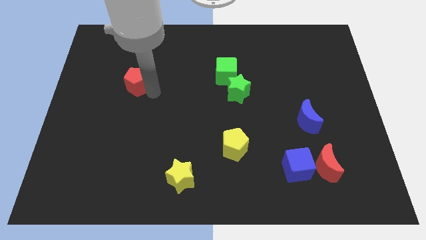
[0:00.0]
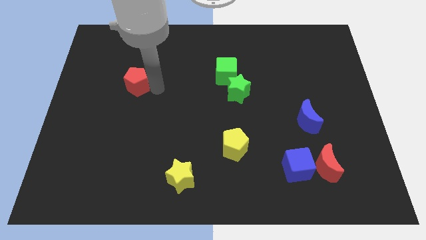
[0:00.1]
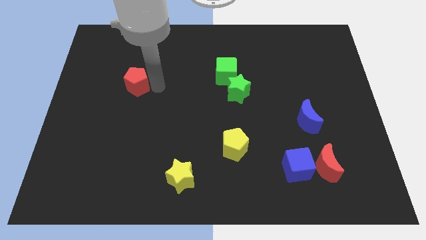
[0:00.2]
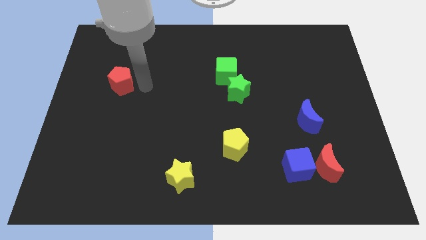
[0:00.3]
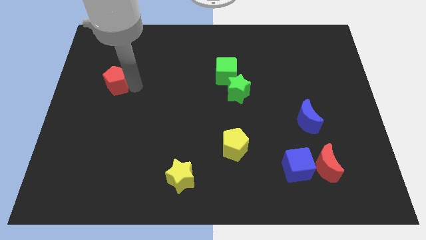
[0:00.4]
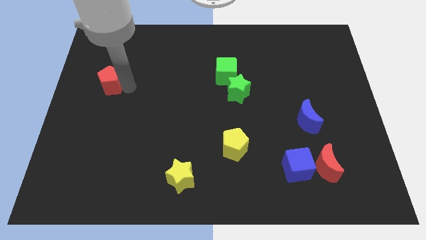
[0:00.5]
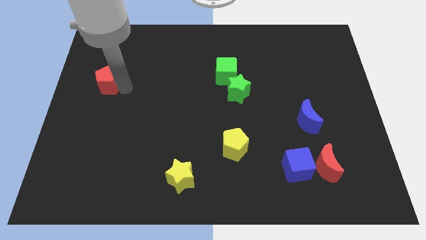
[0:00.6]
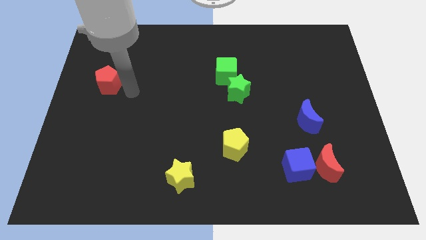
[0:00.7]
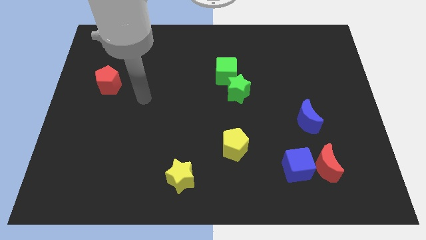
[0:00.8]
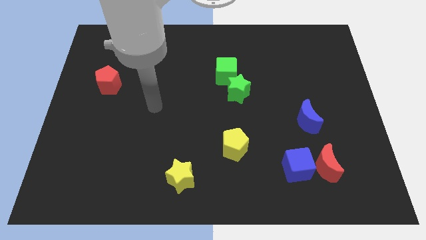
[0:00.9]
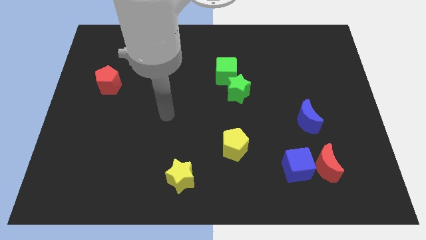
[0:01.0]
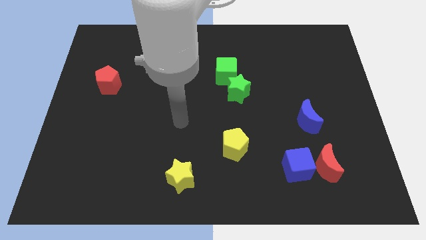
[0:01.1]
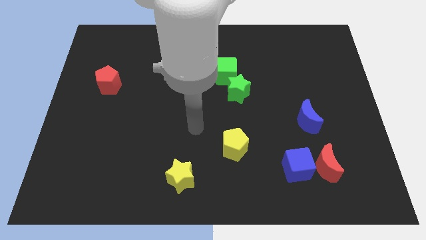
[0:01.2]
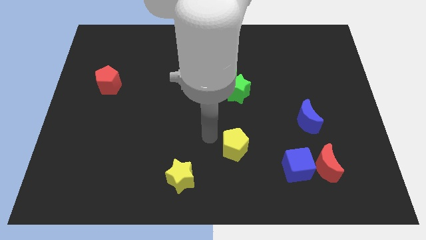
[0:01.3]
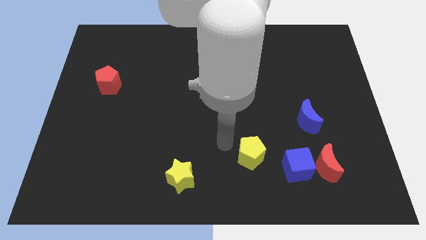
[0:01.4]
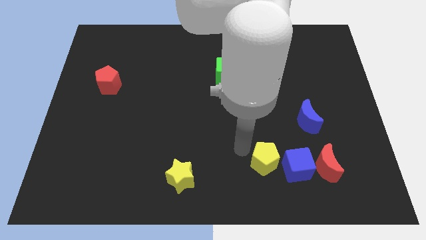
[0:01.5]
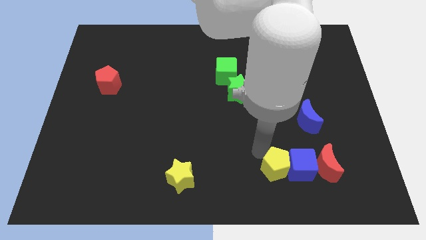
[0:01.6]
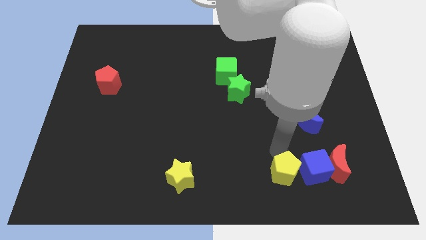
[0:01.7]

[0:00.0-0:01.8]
push the yellow pentagon close to the blue cube

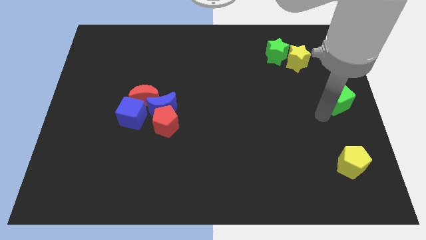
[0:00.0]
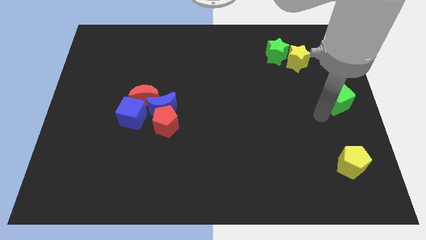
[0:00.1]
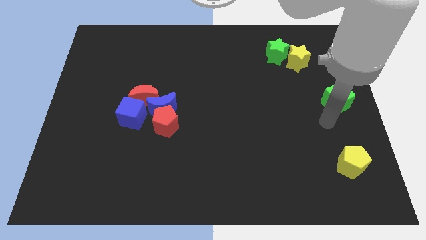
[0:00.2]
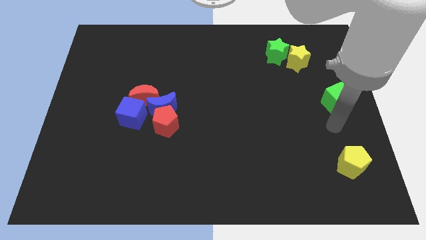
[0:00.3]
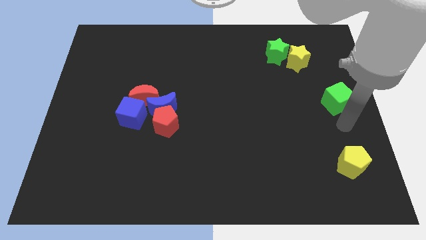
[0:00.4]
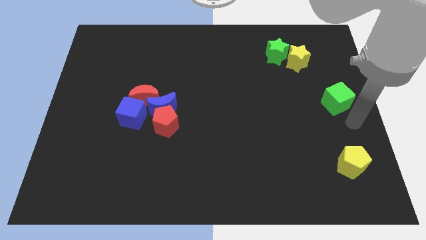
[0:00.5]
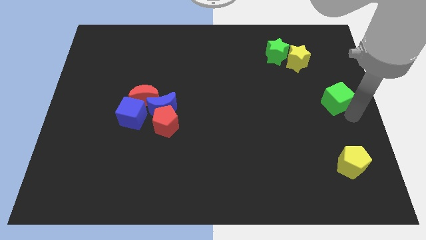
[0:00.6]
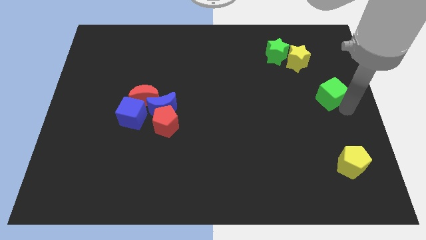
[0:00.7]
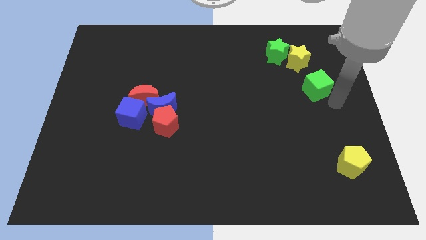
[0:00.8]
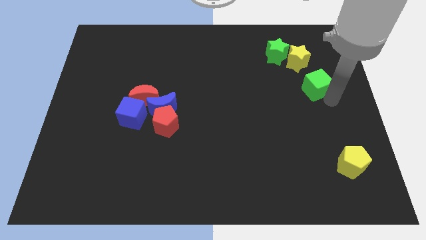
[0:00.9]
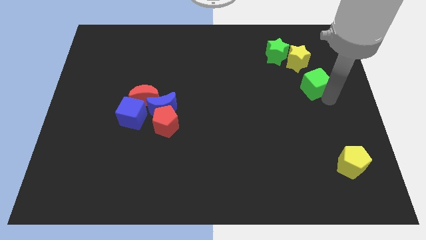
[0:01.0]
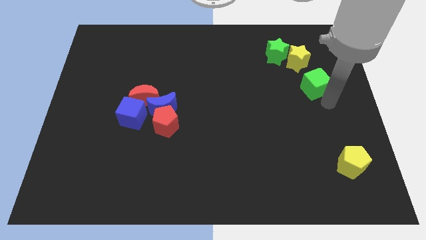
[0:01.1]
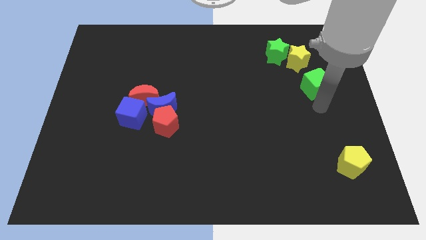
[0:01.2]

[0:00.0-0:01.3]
move green cube below yellow star

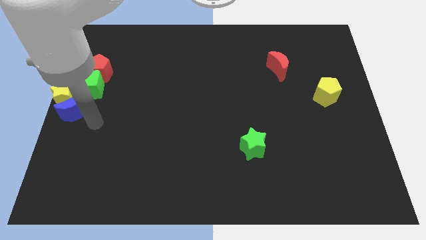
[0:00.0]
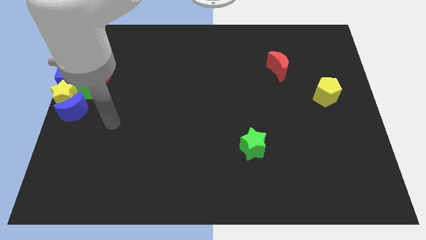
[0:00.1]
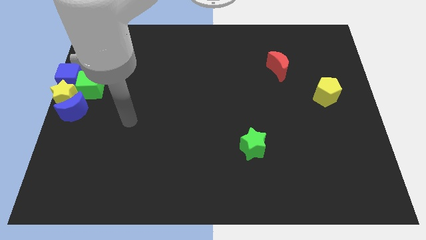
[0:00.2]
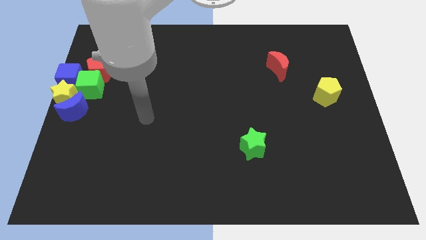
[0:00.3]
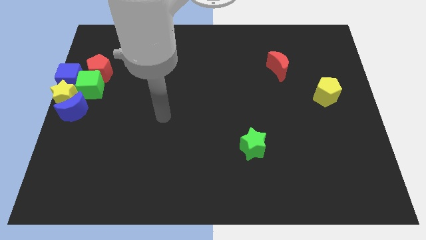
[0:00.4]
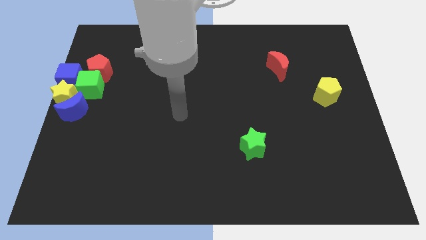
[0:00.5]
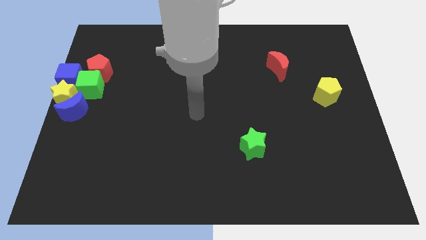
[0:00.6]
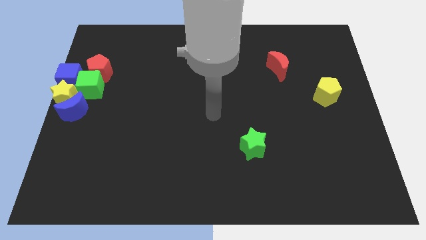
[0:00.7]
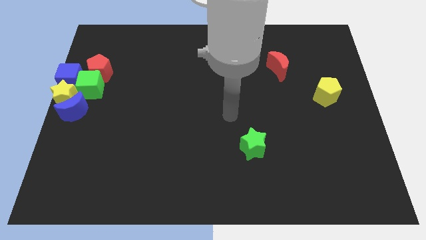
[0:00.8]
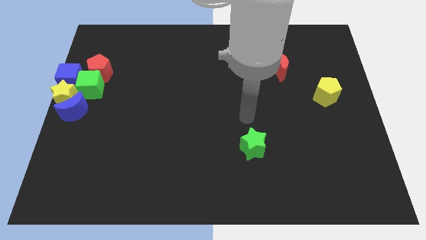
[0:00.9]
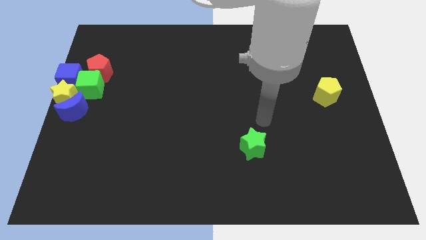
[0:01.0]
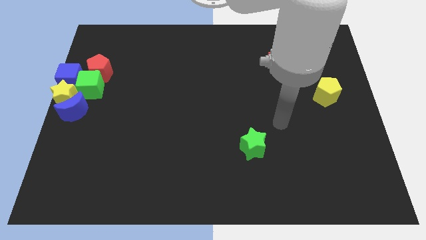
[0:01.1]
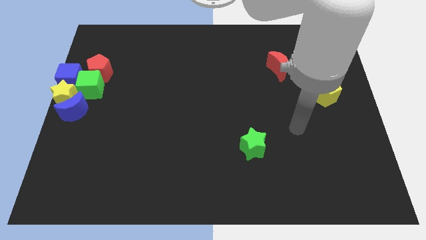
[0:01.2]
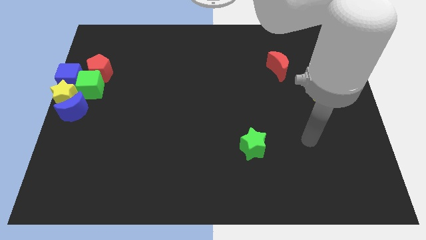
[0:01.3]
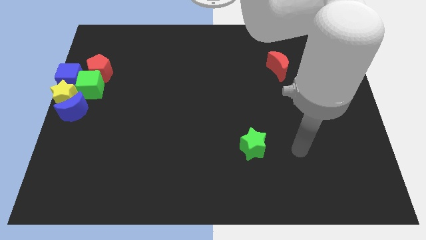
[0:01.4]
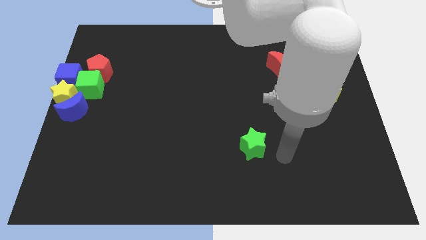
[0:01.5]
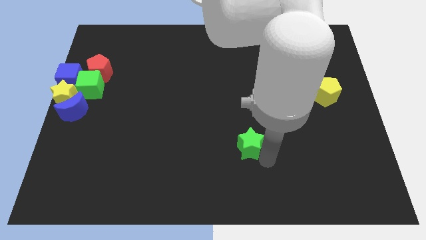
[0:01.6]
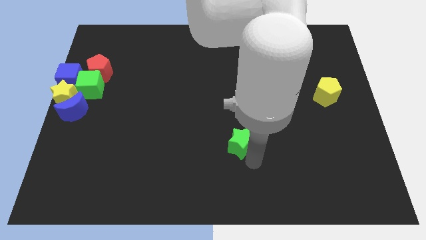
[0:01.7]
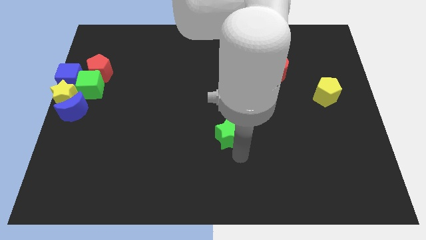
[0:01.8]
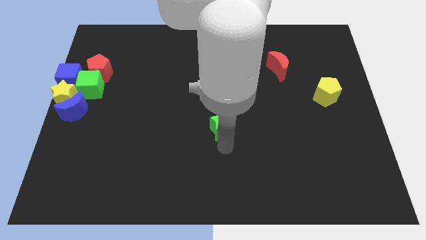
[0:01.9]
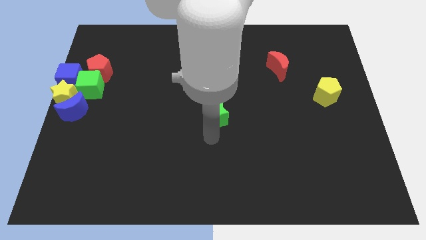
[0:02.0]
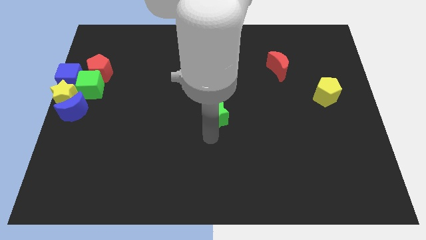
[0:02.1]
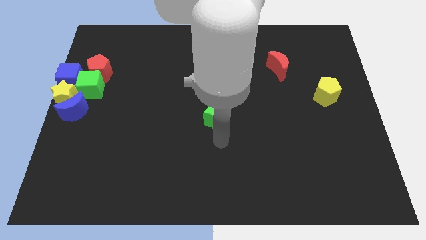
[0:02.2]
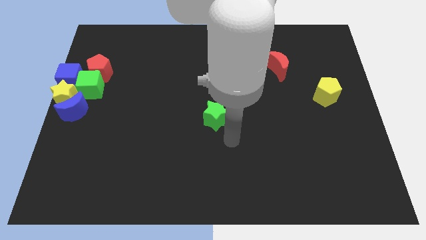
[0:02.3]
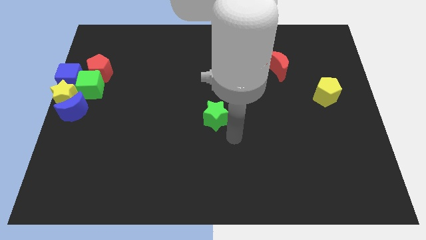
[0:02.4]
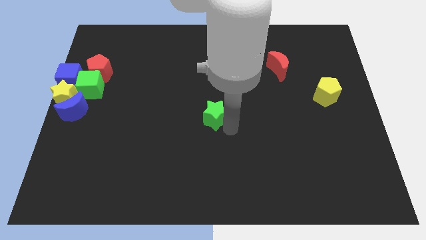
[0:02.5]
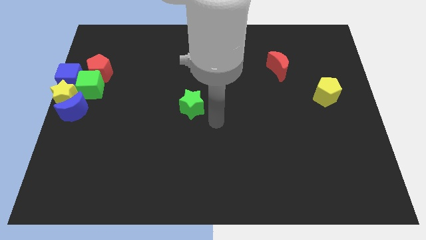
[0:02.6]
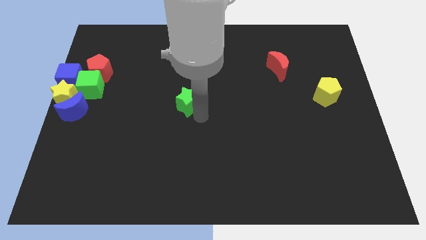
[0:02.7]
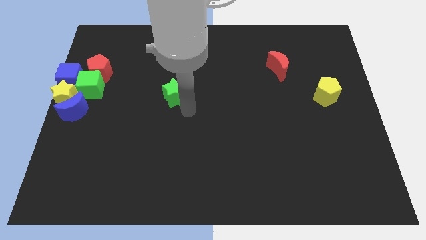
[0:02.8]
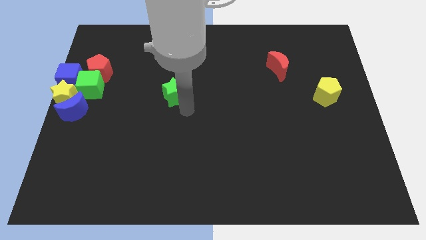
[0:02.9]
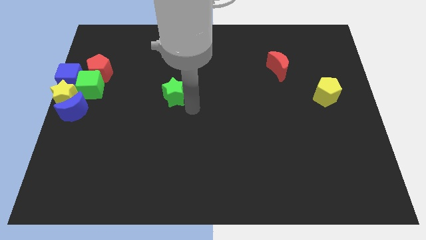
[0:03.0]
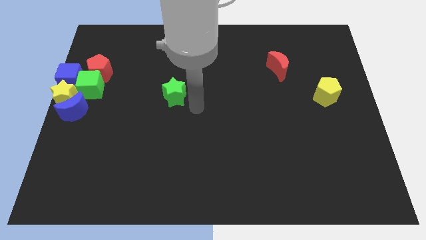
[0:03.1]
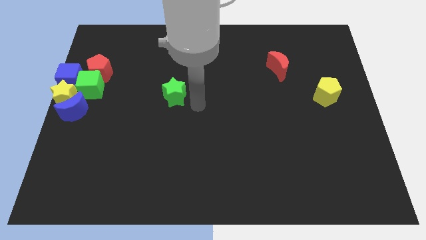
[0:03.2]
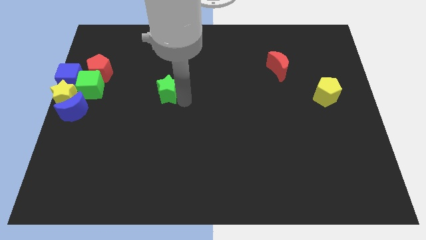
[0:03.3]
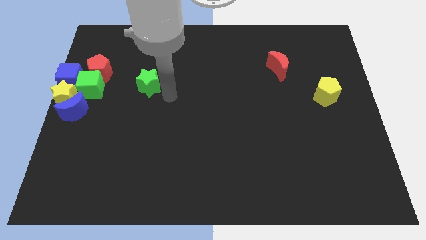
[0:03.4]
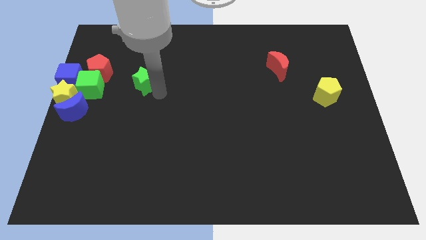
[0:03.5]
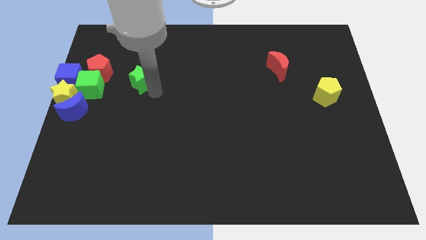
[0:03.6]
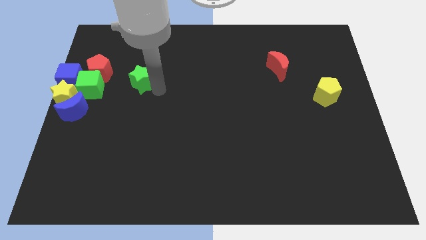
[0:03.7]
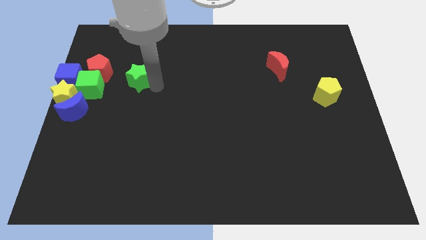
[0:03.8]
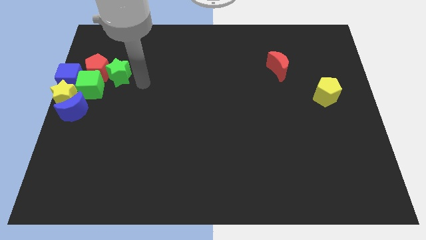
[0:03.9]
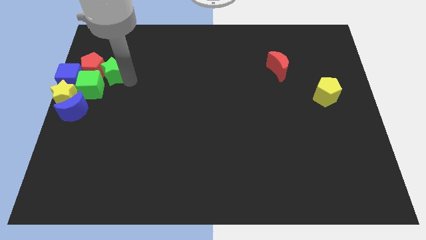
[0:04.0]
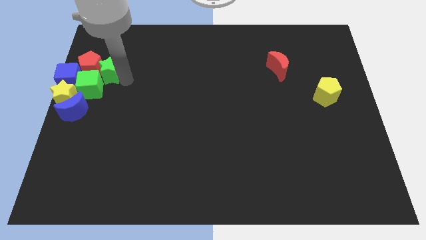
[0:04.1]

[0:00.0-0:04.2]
move the green star to the top right of the green cube

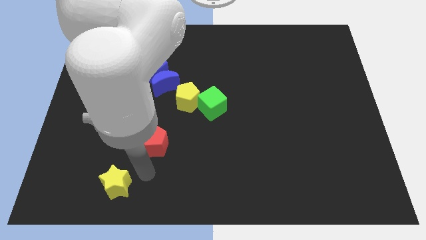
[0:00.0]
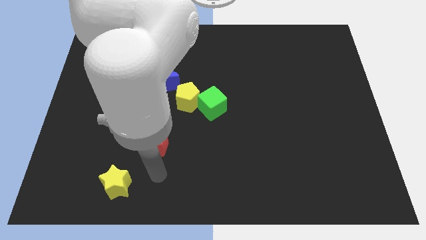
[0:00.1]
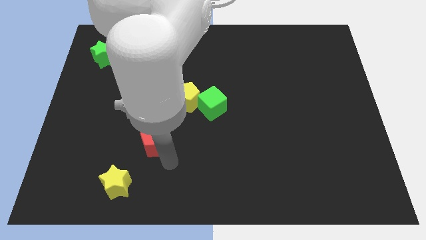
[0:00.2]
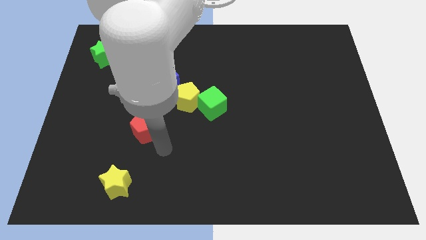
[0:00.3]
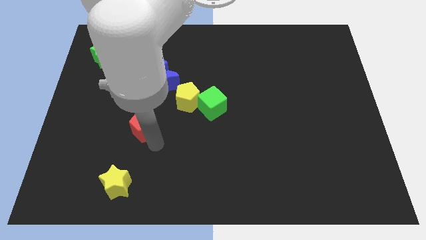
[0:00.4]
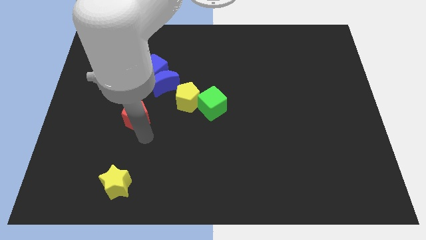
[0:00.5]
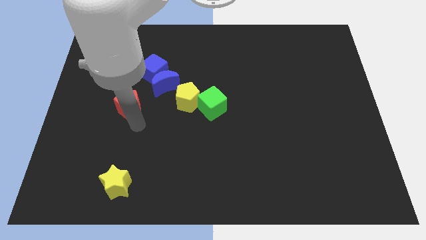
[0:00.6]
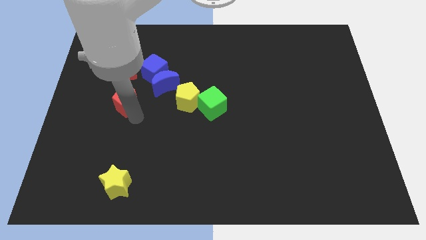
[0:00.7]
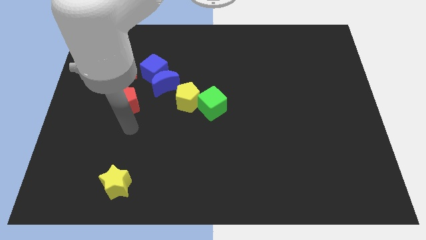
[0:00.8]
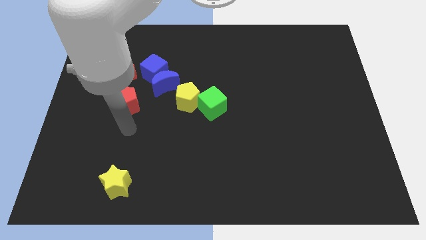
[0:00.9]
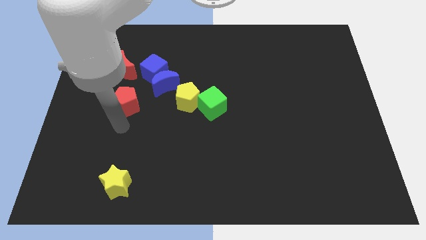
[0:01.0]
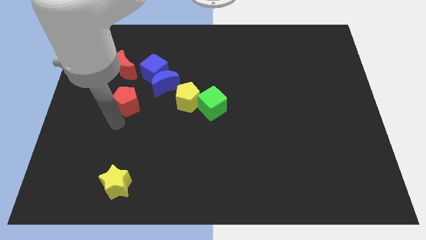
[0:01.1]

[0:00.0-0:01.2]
drag the red pentagon in between the red moon and yellow star

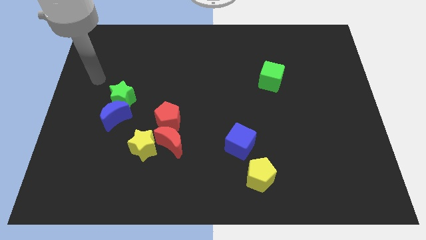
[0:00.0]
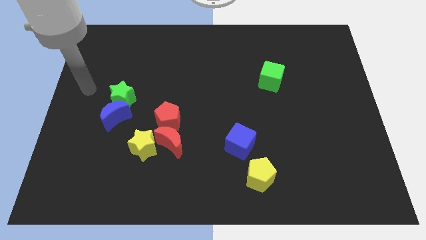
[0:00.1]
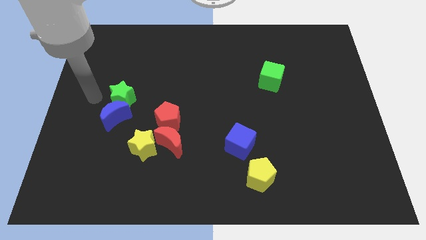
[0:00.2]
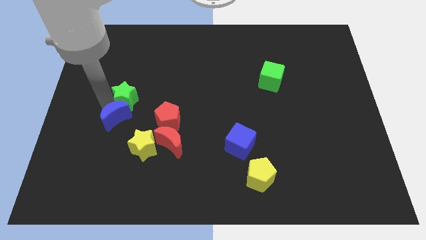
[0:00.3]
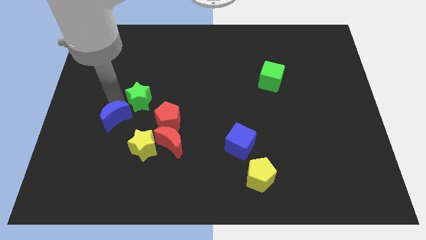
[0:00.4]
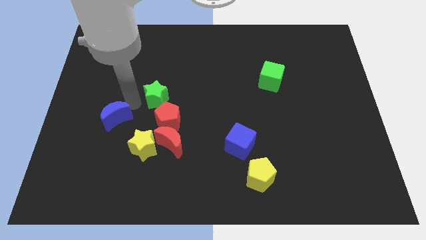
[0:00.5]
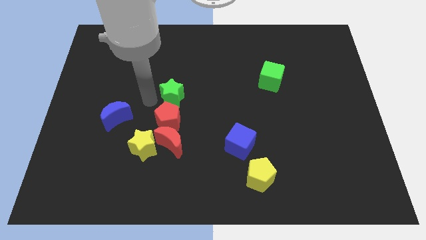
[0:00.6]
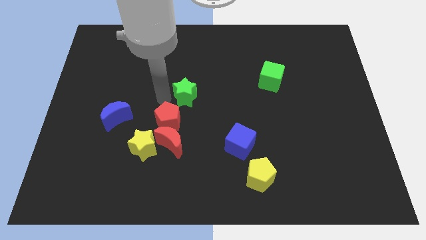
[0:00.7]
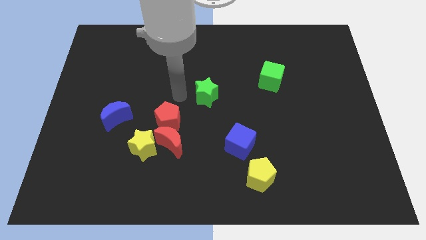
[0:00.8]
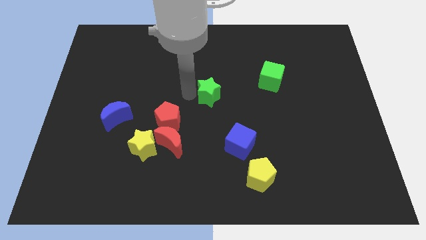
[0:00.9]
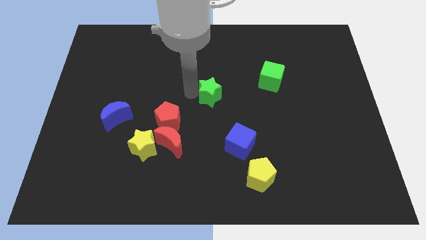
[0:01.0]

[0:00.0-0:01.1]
push the green star to the right
